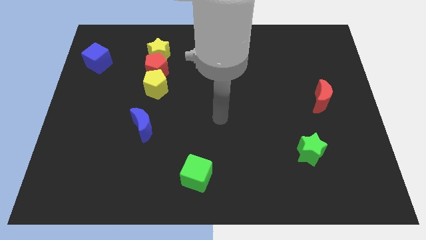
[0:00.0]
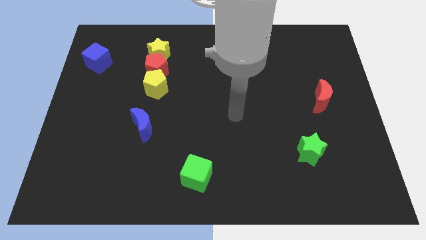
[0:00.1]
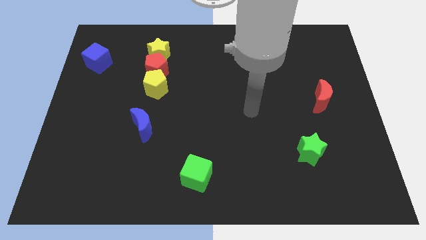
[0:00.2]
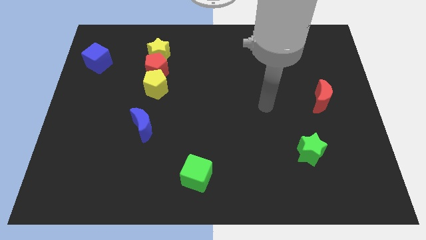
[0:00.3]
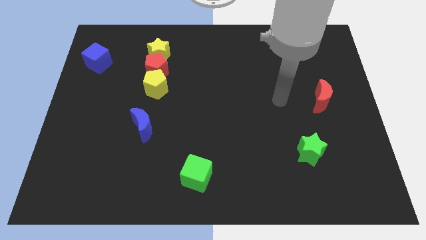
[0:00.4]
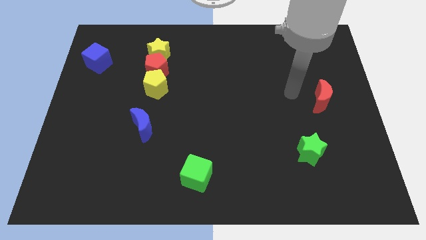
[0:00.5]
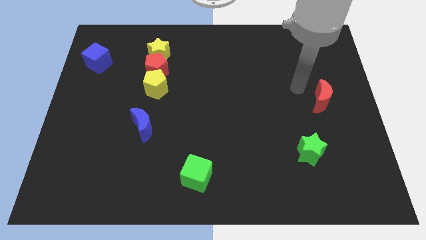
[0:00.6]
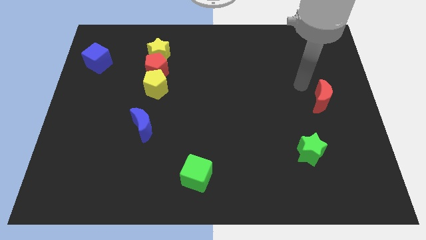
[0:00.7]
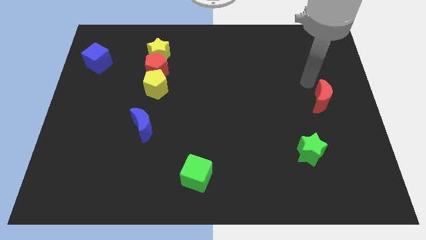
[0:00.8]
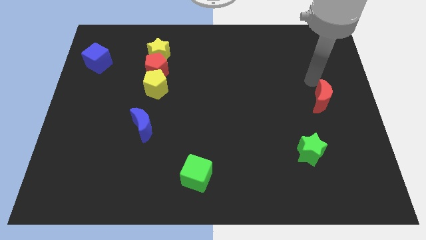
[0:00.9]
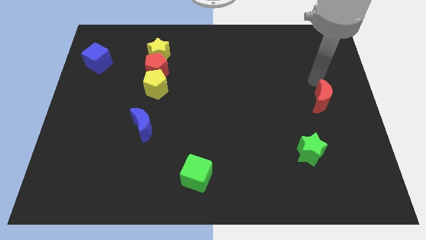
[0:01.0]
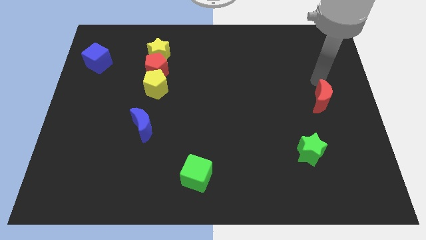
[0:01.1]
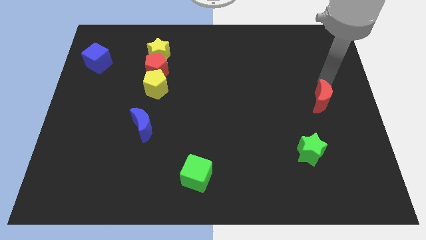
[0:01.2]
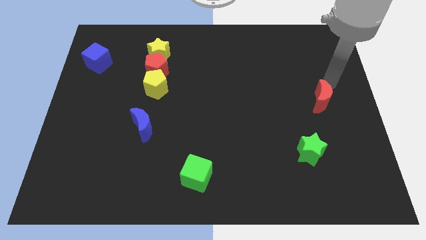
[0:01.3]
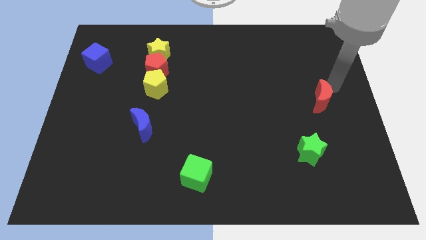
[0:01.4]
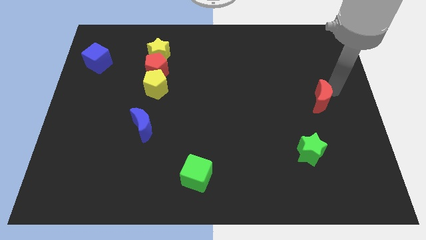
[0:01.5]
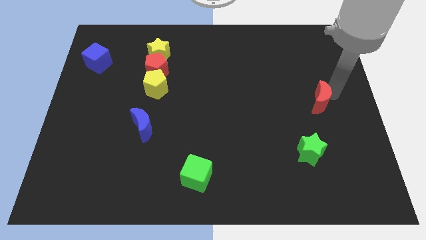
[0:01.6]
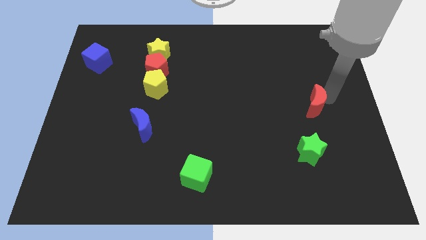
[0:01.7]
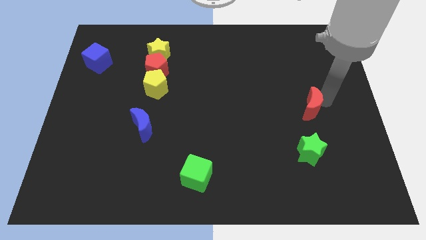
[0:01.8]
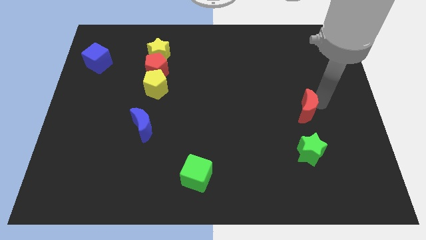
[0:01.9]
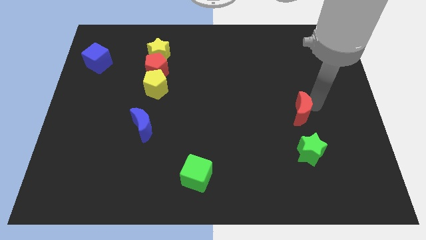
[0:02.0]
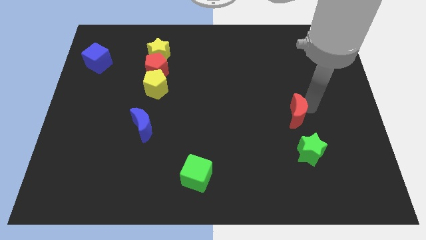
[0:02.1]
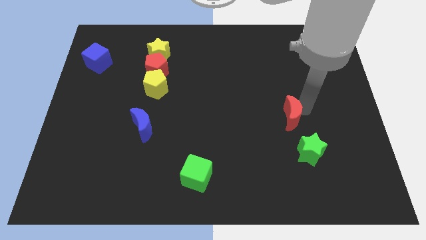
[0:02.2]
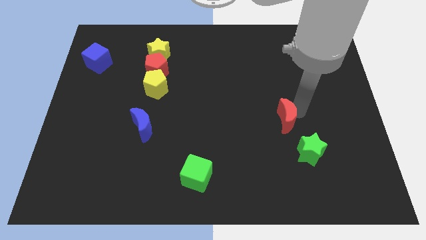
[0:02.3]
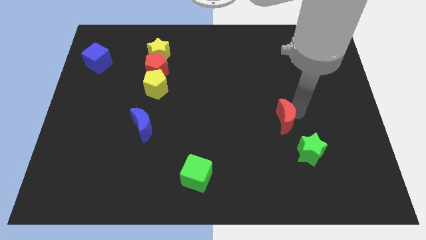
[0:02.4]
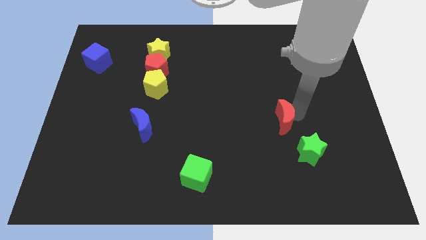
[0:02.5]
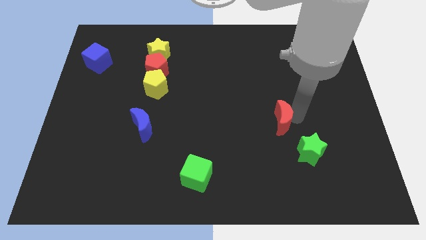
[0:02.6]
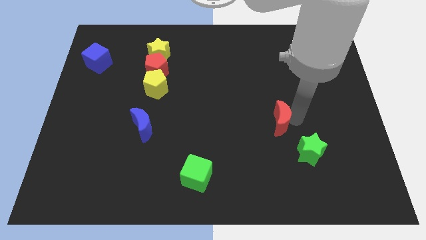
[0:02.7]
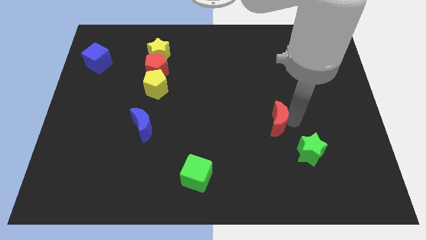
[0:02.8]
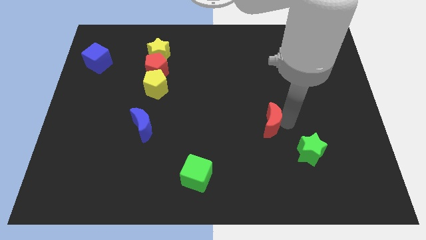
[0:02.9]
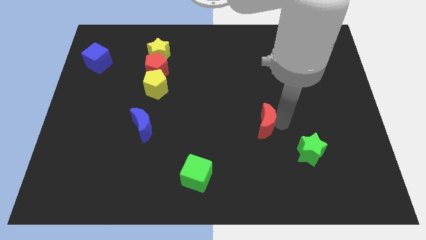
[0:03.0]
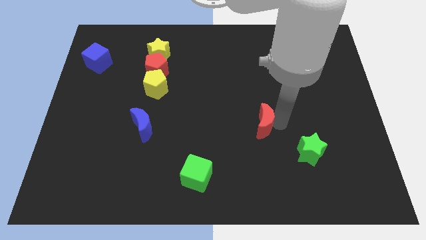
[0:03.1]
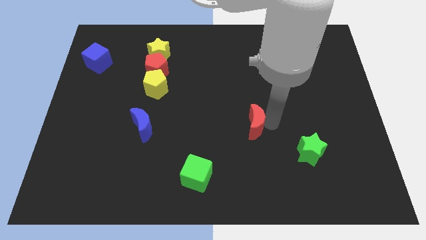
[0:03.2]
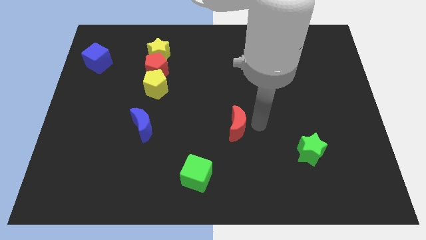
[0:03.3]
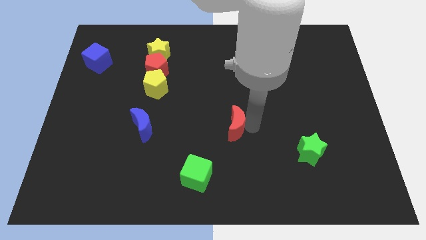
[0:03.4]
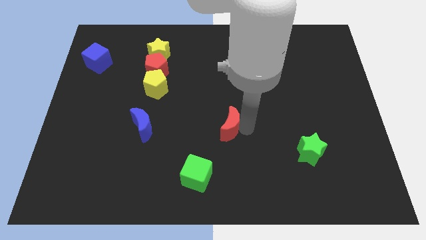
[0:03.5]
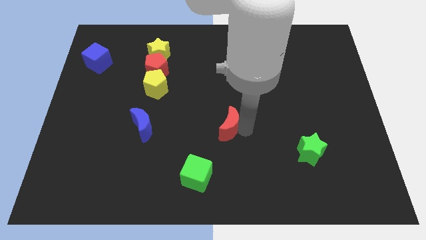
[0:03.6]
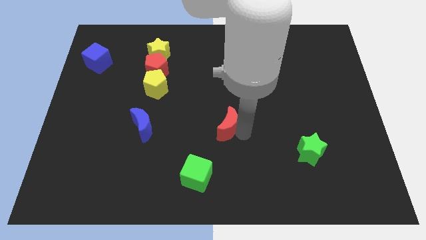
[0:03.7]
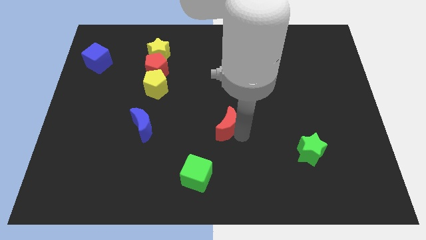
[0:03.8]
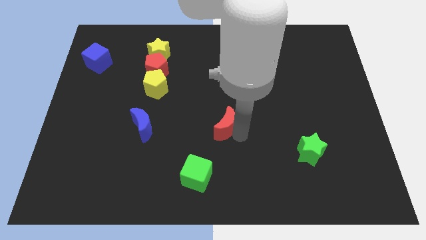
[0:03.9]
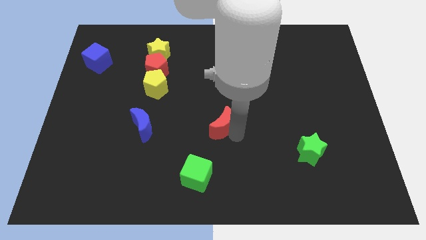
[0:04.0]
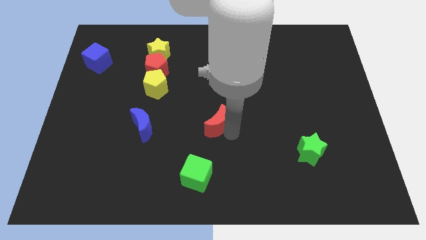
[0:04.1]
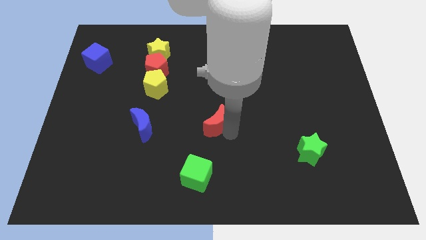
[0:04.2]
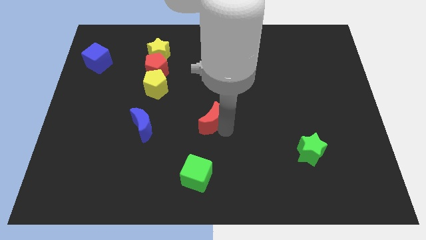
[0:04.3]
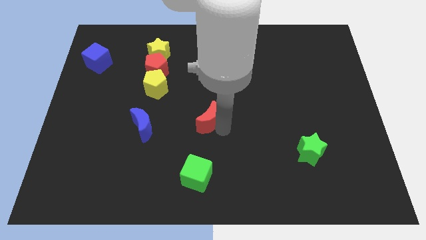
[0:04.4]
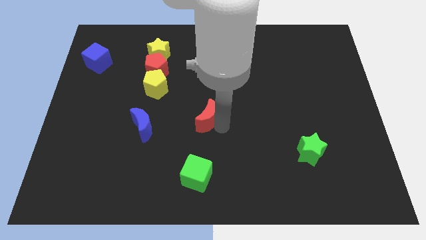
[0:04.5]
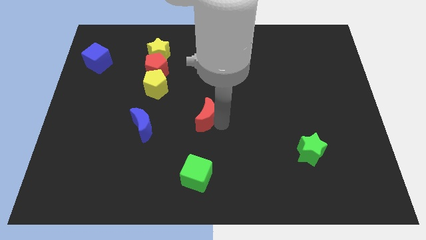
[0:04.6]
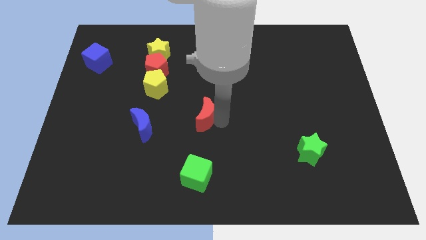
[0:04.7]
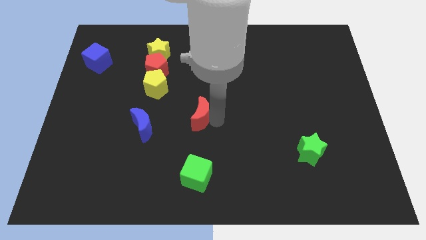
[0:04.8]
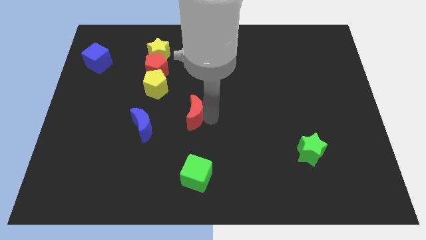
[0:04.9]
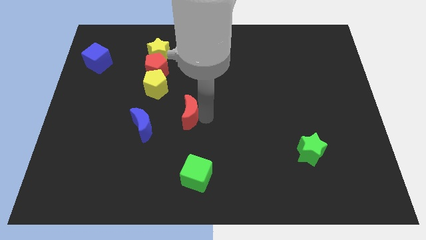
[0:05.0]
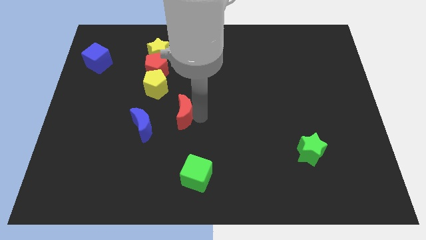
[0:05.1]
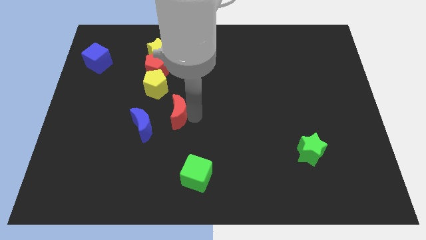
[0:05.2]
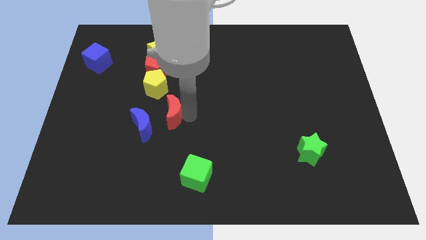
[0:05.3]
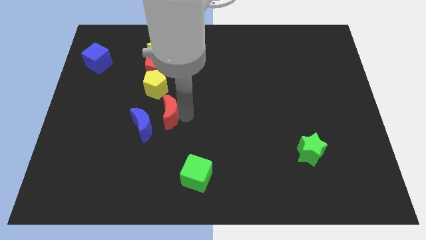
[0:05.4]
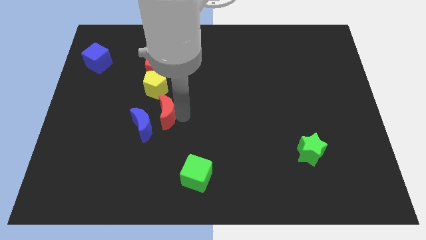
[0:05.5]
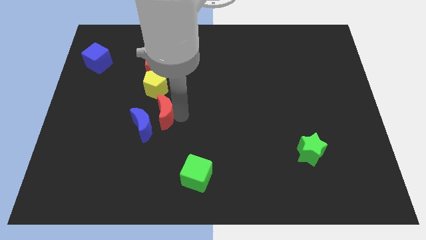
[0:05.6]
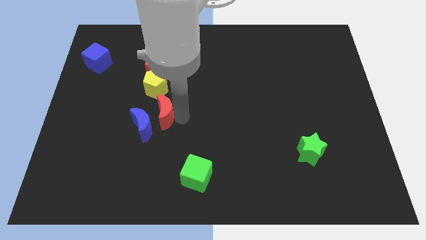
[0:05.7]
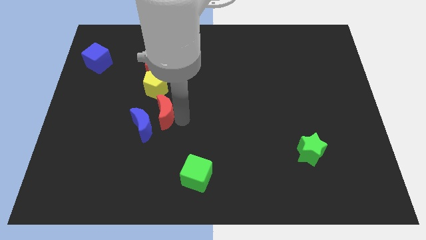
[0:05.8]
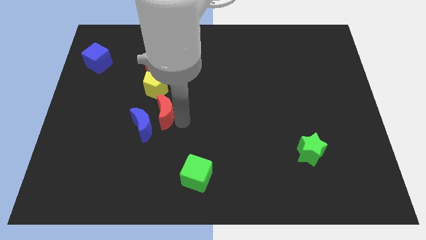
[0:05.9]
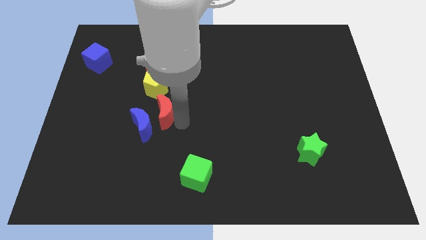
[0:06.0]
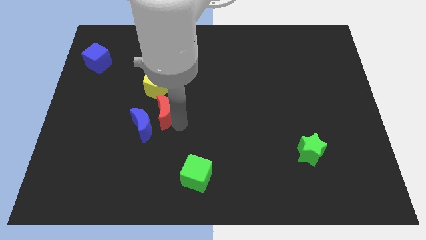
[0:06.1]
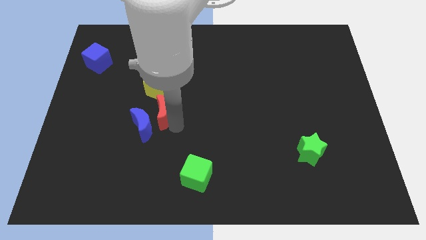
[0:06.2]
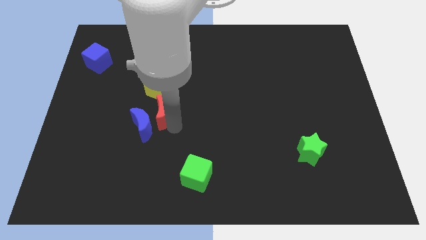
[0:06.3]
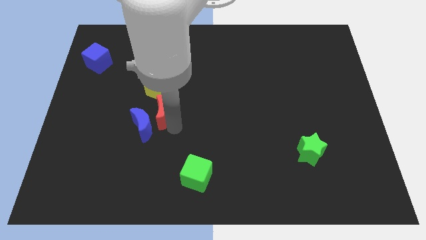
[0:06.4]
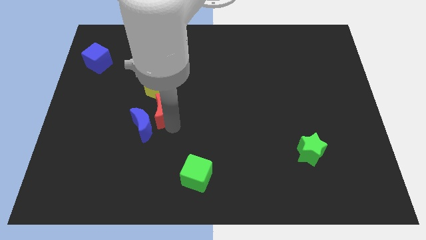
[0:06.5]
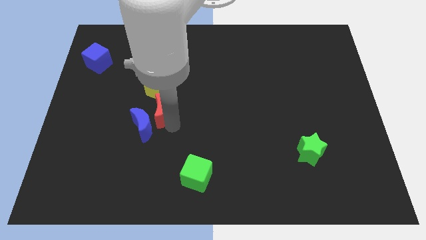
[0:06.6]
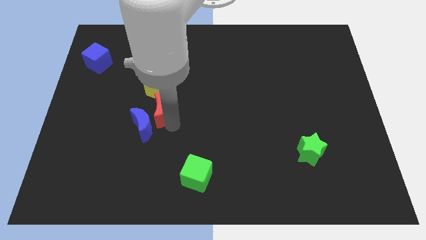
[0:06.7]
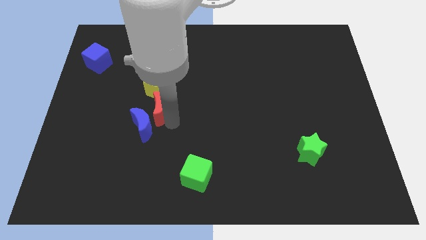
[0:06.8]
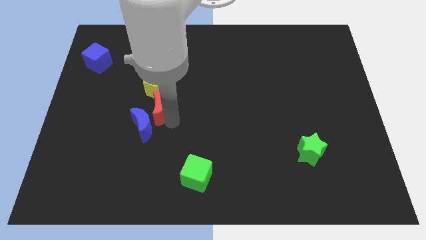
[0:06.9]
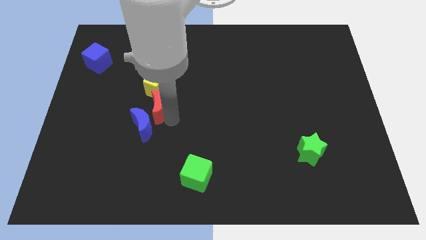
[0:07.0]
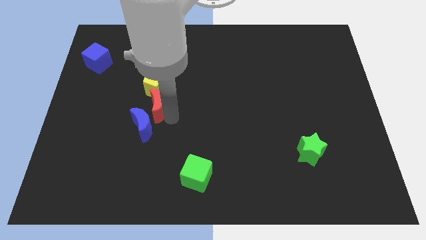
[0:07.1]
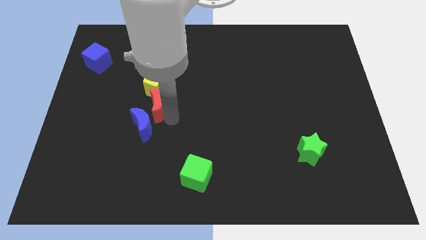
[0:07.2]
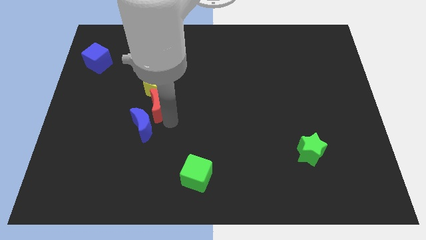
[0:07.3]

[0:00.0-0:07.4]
move the red crescent in between the yellow pentagon and blue crescent

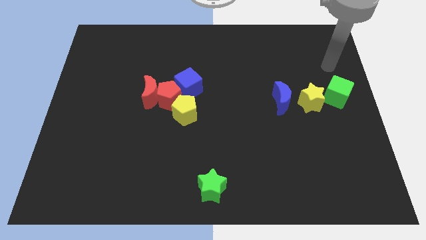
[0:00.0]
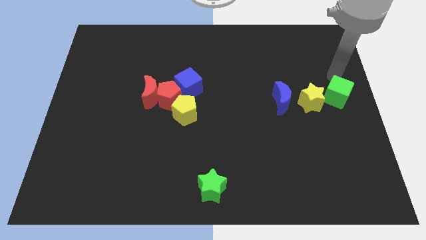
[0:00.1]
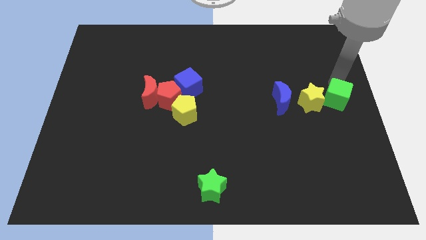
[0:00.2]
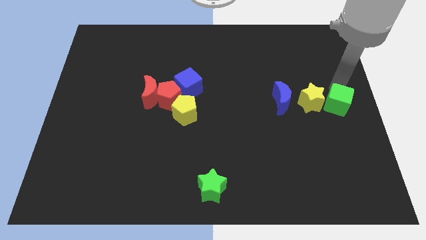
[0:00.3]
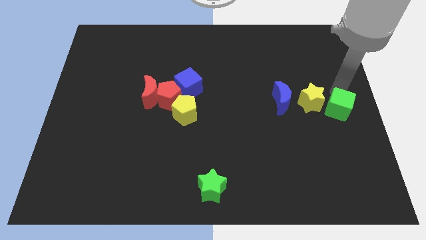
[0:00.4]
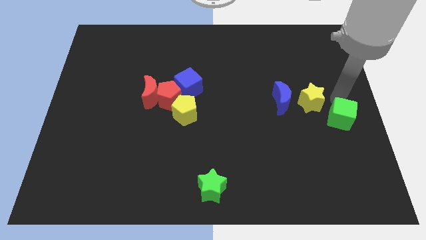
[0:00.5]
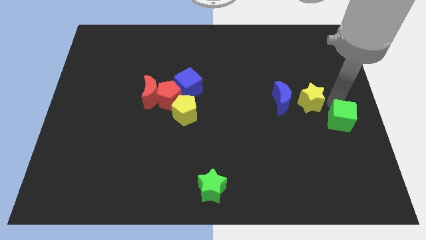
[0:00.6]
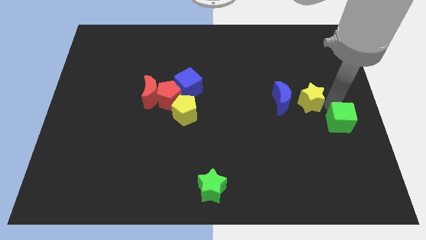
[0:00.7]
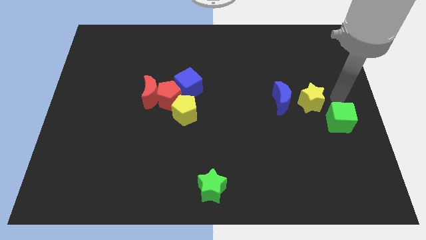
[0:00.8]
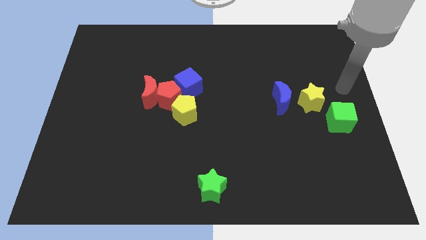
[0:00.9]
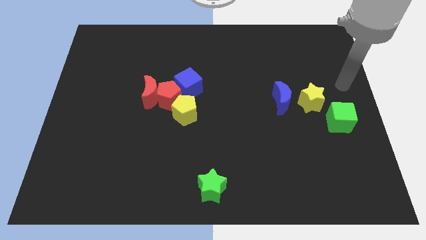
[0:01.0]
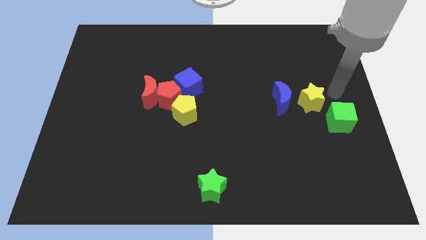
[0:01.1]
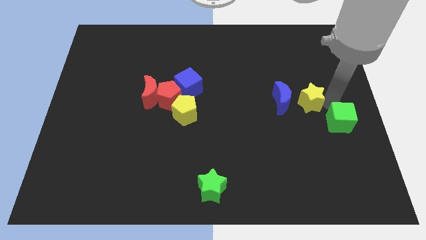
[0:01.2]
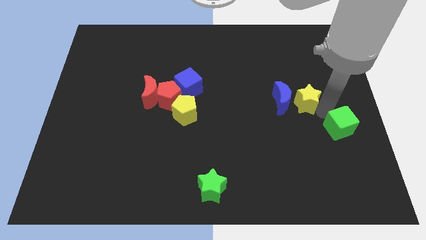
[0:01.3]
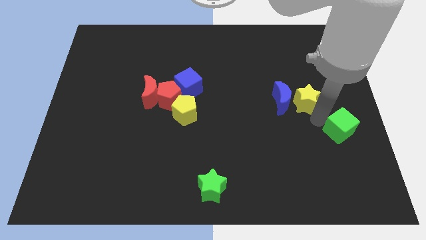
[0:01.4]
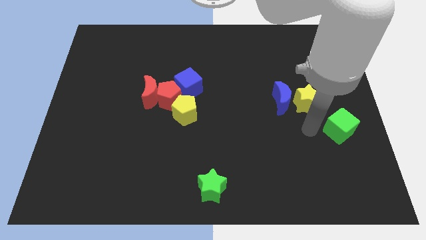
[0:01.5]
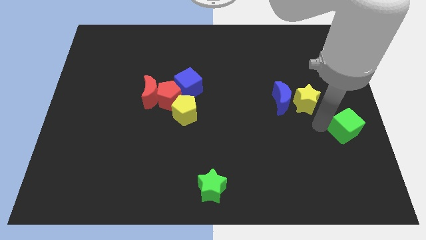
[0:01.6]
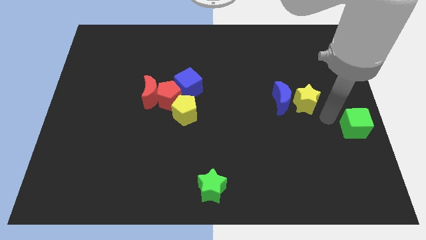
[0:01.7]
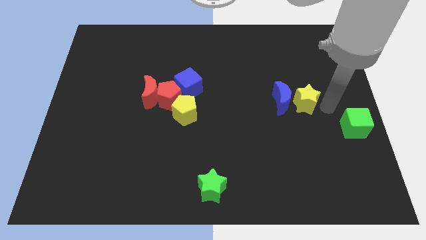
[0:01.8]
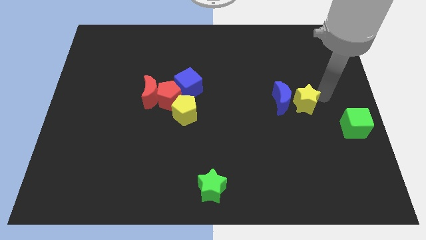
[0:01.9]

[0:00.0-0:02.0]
separate the green cube and yellow star
